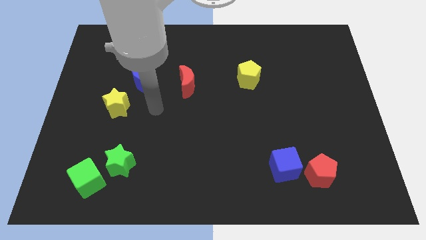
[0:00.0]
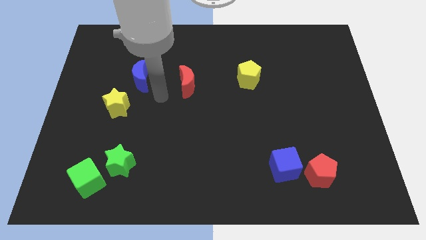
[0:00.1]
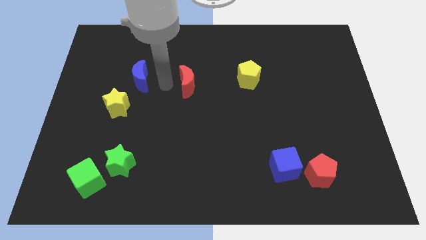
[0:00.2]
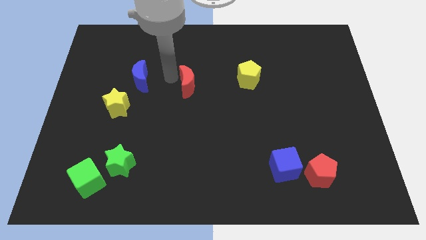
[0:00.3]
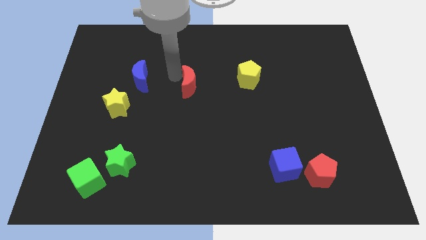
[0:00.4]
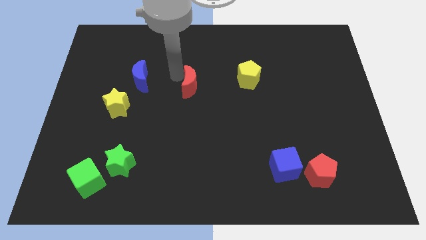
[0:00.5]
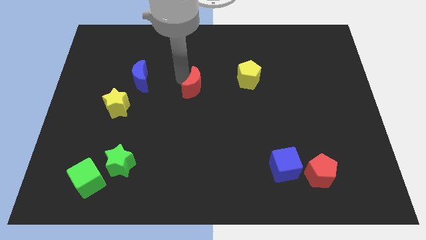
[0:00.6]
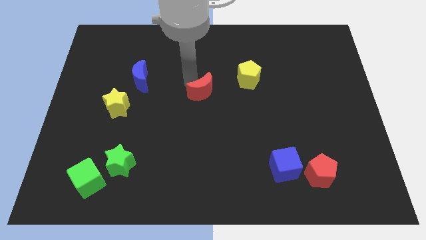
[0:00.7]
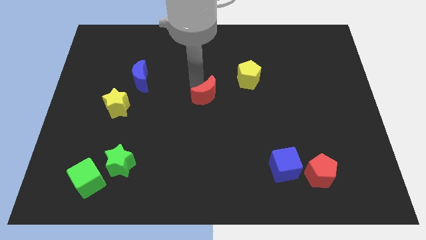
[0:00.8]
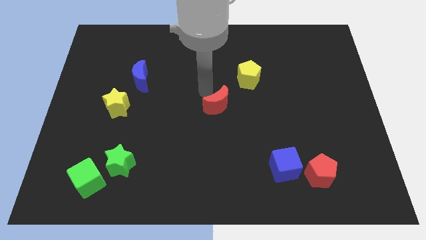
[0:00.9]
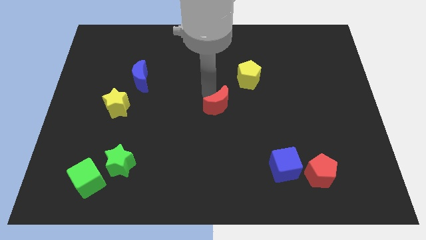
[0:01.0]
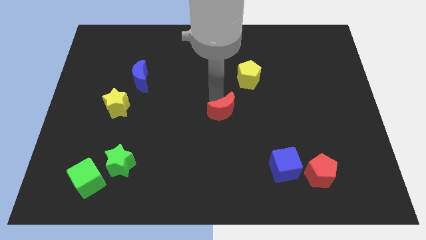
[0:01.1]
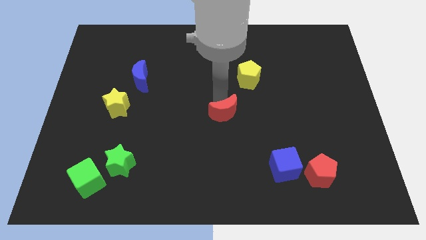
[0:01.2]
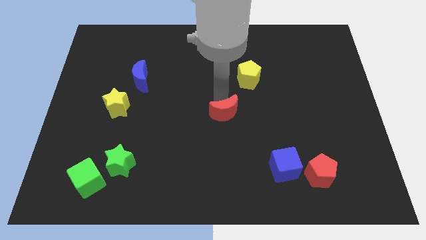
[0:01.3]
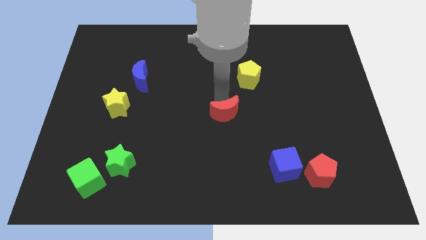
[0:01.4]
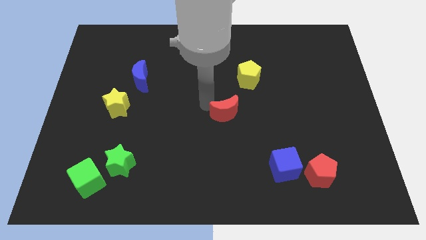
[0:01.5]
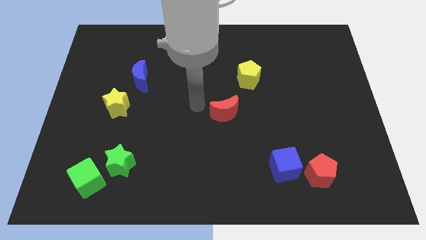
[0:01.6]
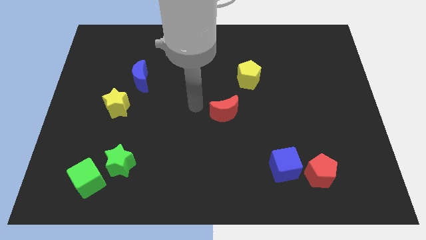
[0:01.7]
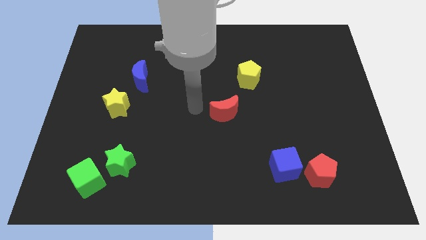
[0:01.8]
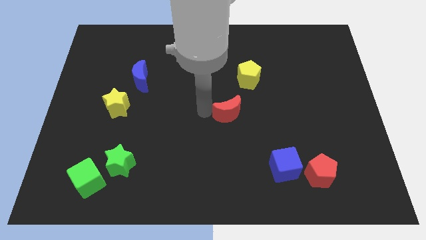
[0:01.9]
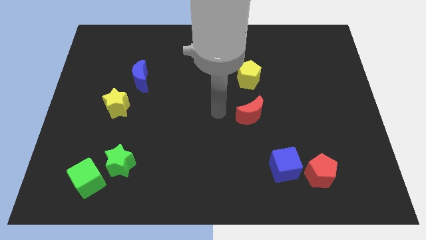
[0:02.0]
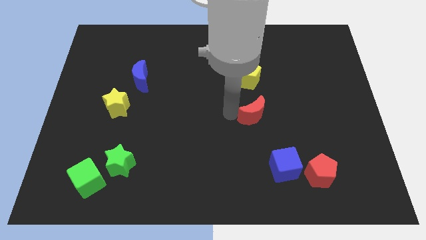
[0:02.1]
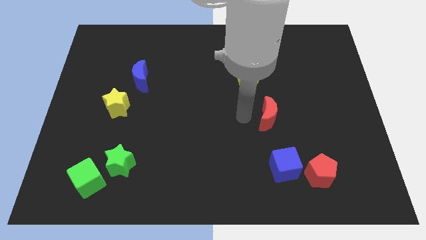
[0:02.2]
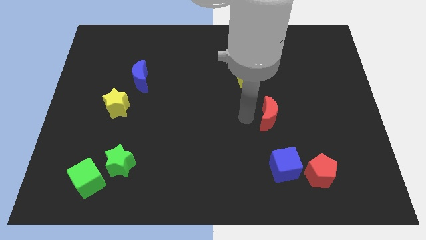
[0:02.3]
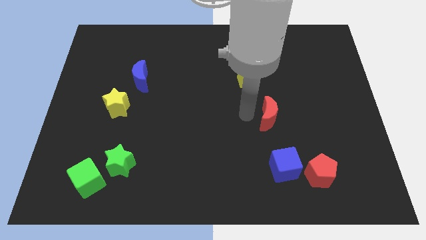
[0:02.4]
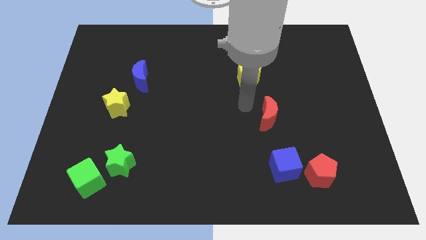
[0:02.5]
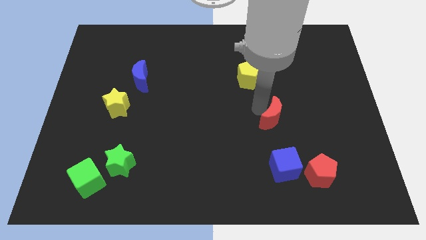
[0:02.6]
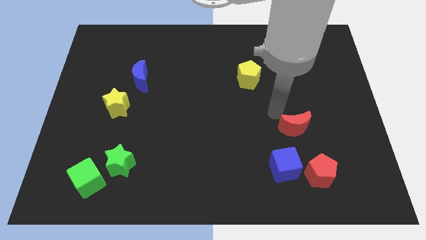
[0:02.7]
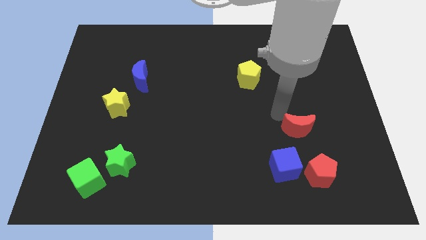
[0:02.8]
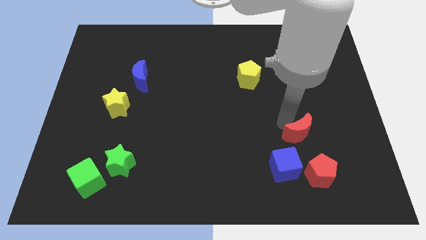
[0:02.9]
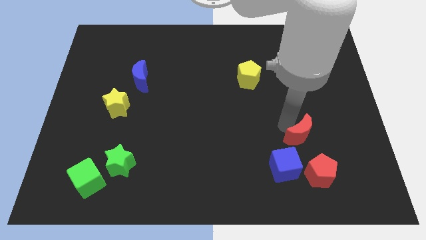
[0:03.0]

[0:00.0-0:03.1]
move red moon towards red pentagon

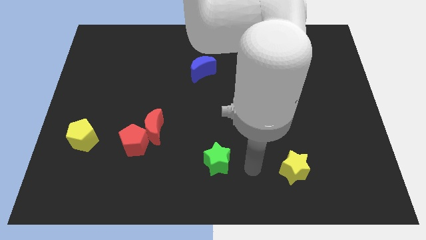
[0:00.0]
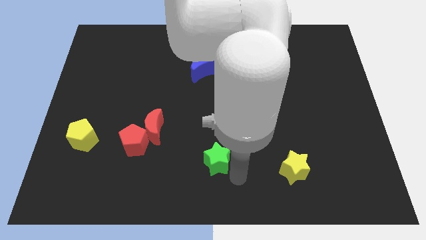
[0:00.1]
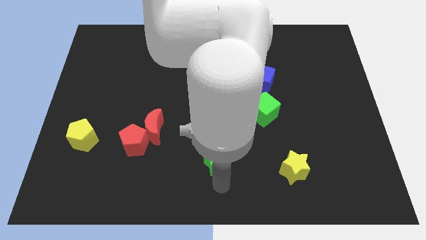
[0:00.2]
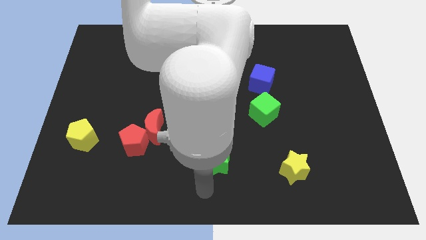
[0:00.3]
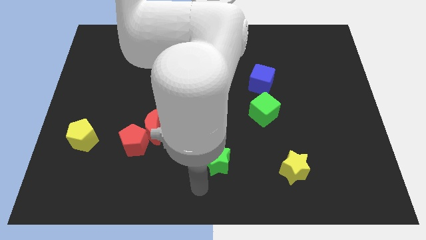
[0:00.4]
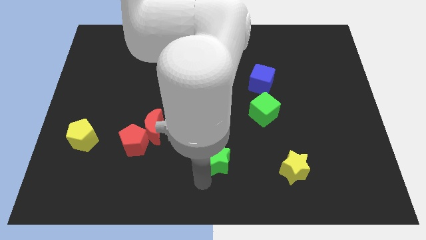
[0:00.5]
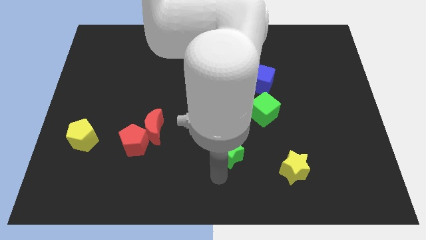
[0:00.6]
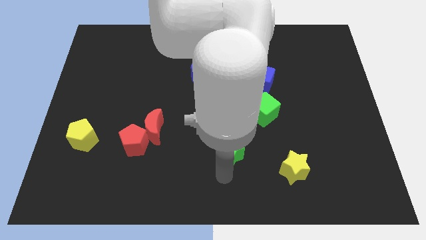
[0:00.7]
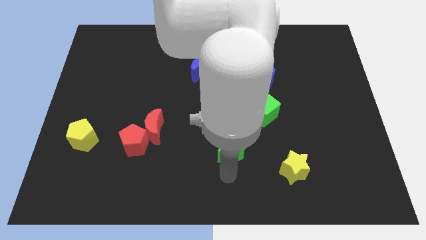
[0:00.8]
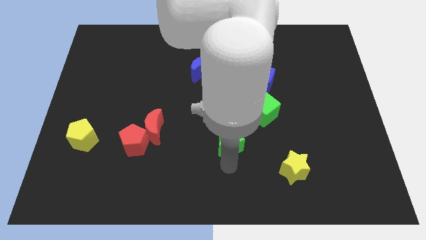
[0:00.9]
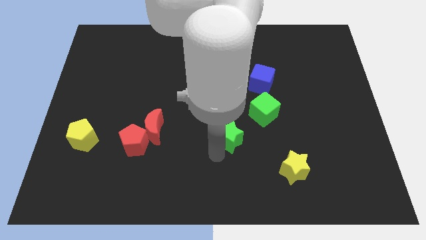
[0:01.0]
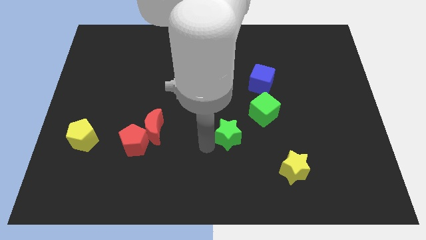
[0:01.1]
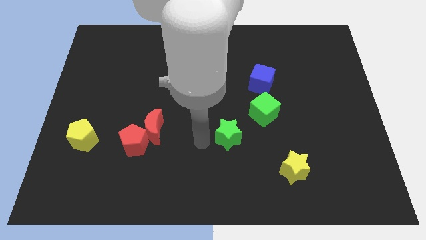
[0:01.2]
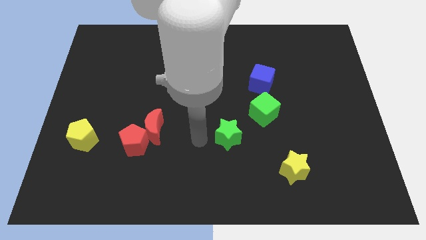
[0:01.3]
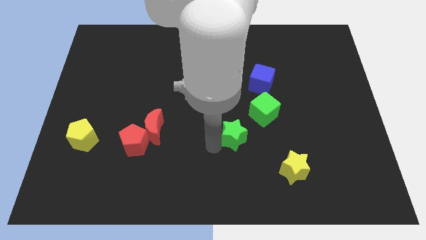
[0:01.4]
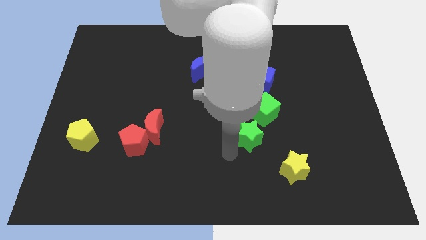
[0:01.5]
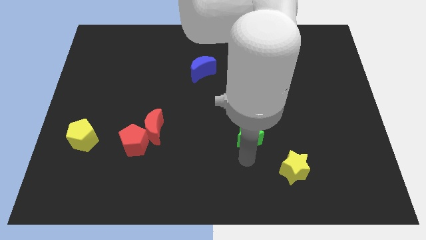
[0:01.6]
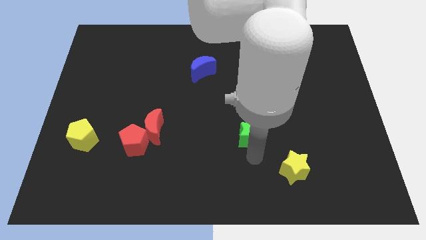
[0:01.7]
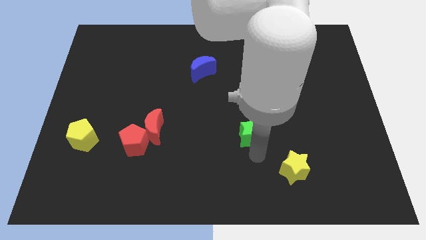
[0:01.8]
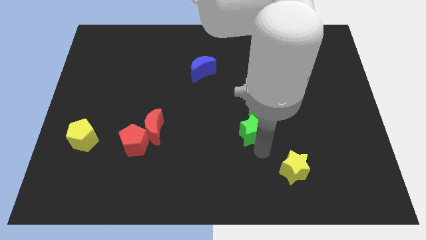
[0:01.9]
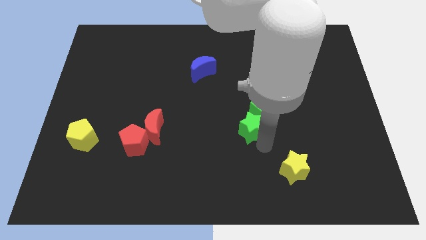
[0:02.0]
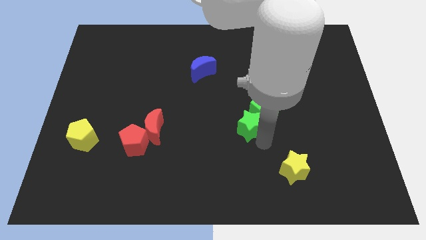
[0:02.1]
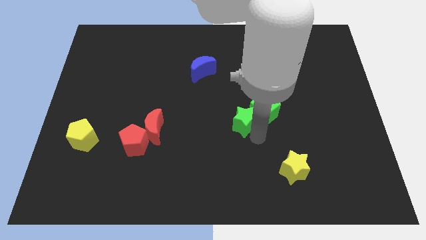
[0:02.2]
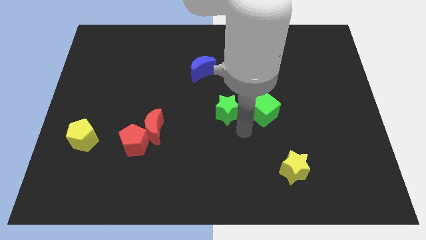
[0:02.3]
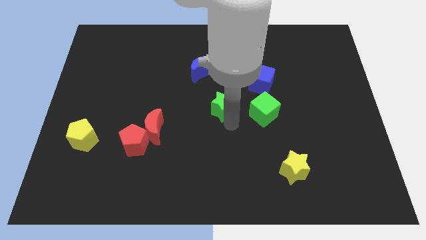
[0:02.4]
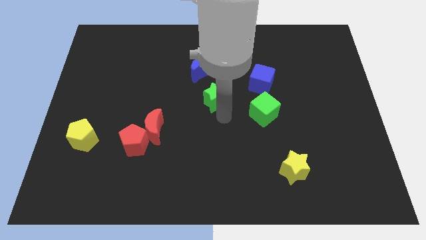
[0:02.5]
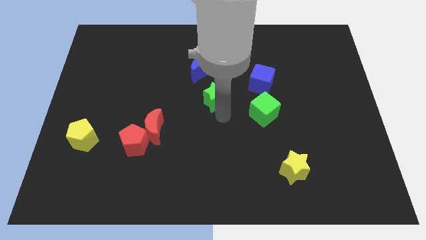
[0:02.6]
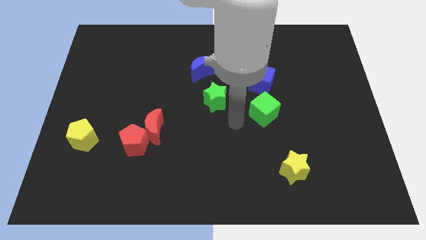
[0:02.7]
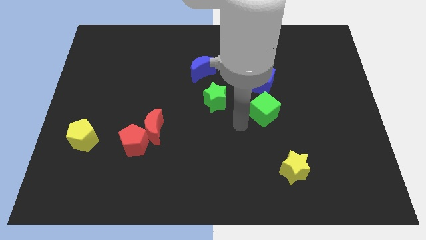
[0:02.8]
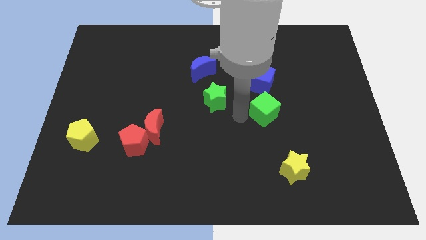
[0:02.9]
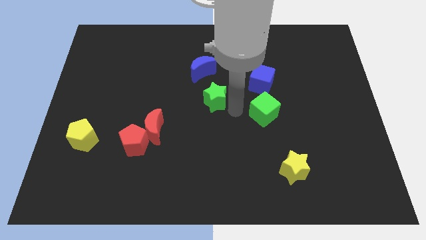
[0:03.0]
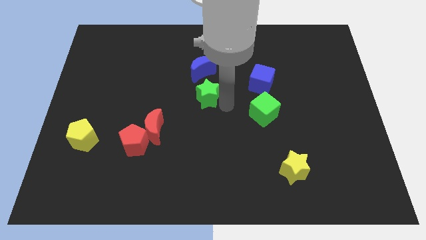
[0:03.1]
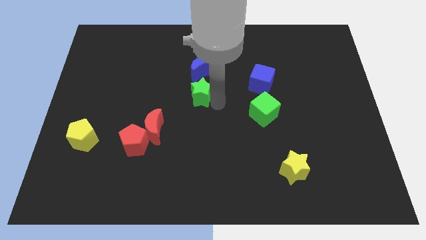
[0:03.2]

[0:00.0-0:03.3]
push the green star to the center of the board

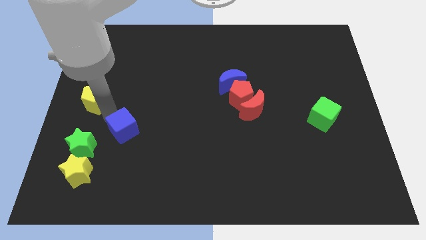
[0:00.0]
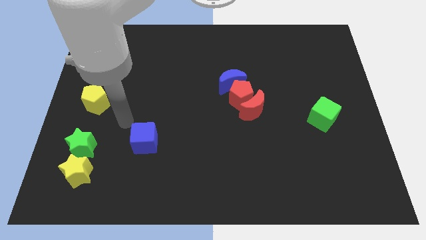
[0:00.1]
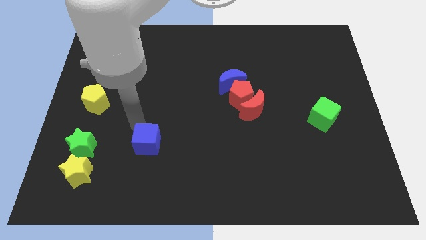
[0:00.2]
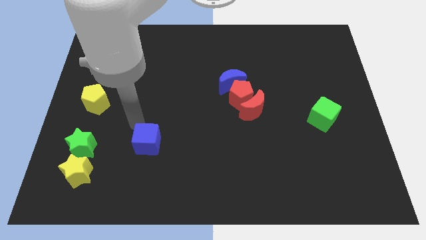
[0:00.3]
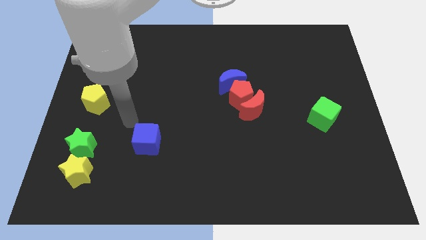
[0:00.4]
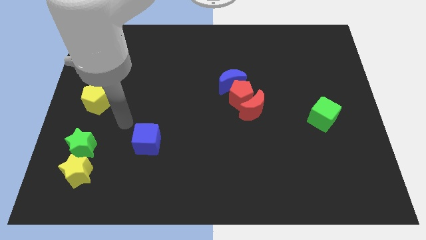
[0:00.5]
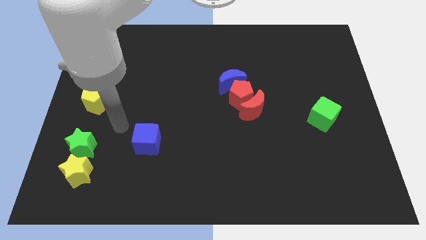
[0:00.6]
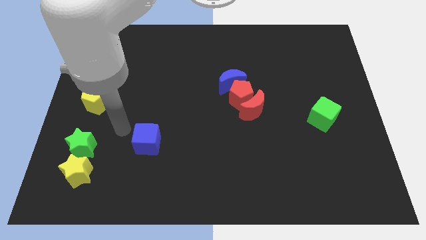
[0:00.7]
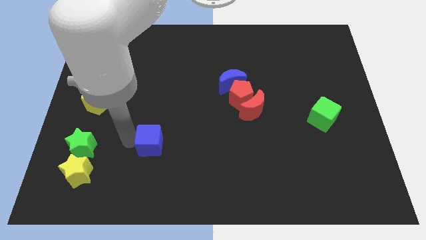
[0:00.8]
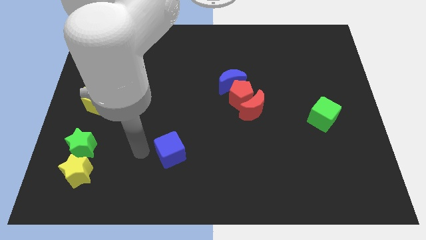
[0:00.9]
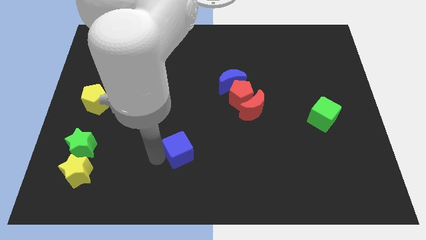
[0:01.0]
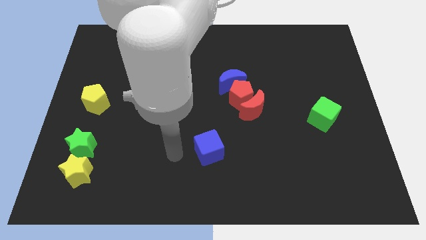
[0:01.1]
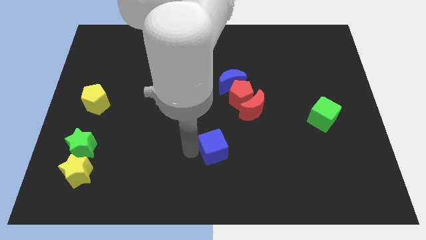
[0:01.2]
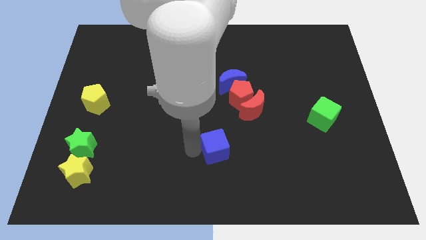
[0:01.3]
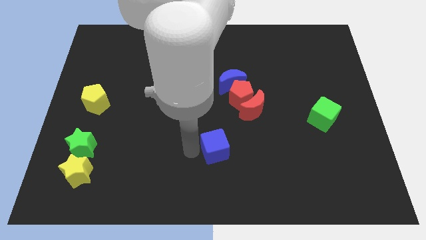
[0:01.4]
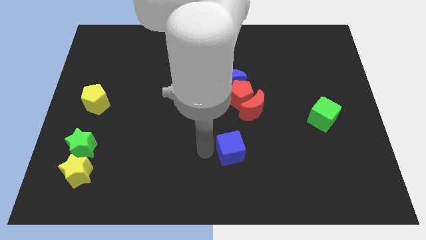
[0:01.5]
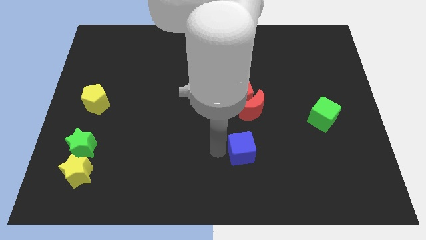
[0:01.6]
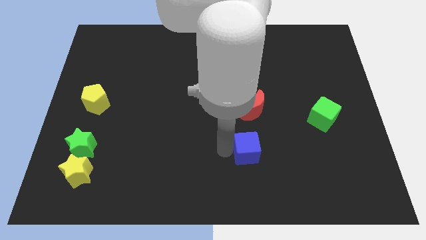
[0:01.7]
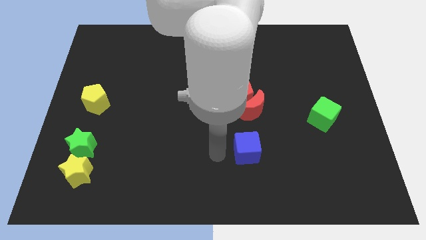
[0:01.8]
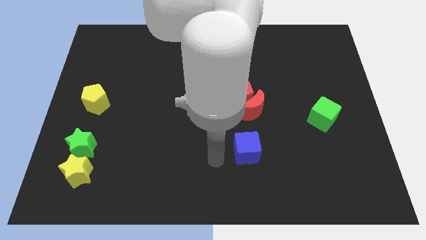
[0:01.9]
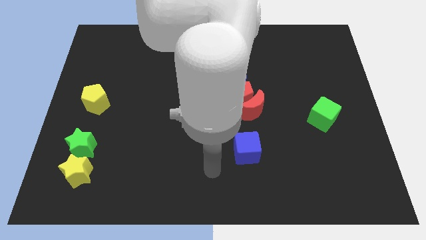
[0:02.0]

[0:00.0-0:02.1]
push the blue cube towards the bottom right

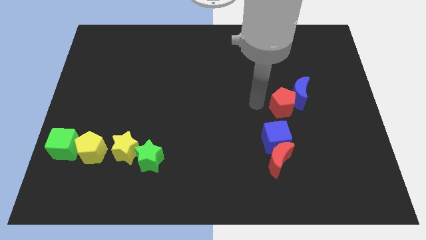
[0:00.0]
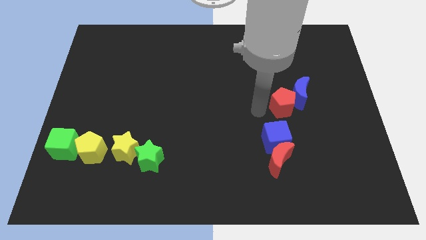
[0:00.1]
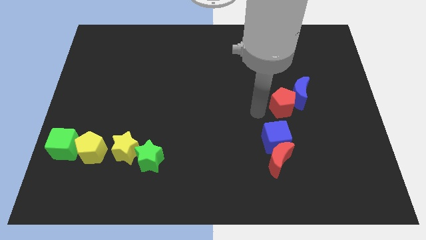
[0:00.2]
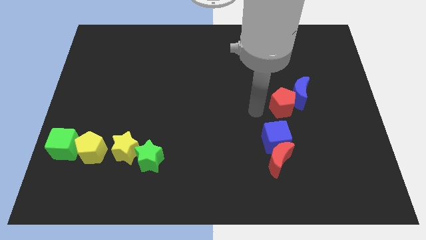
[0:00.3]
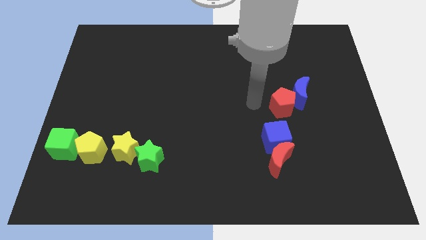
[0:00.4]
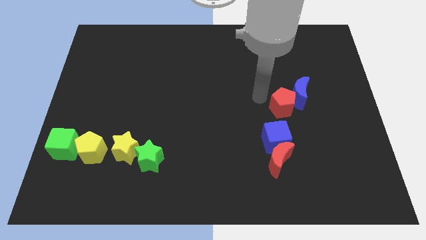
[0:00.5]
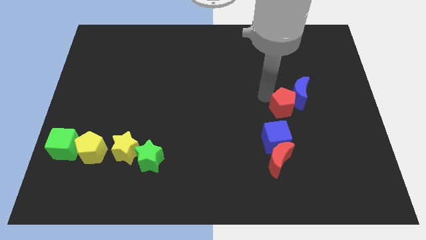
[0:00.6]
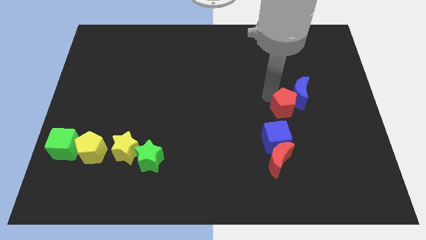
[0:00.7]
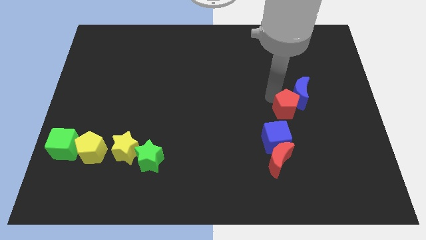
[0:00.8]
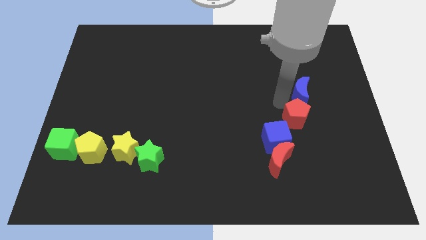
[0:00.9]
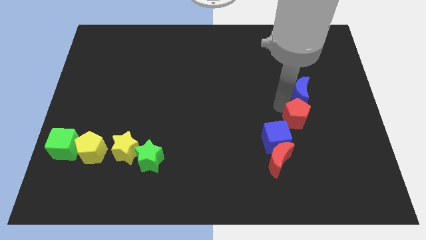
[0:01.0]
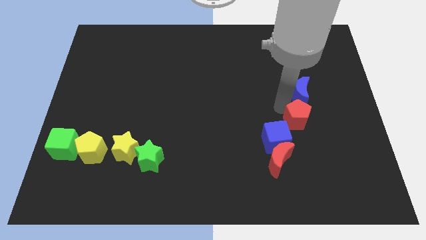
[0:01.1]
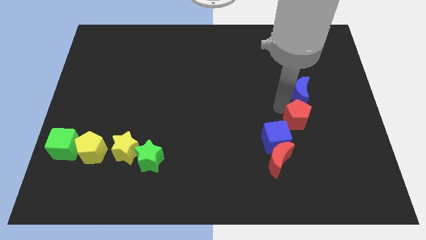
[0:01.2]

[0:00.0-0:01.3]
place the red pentagon to the bottom of blue crescent
